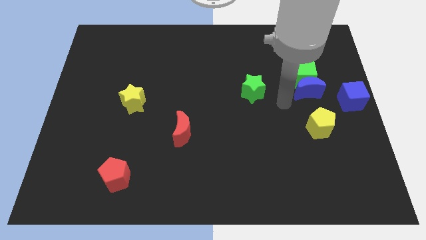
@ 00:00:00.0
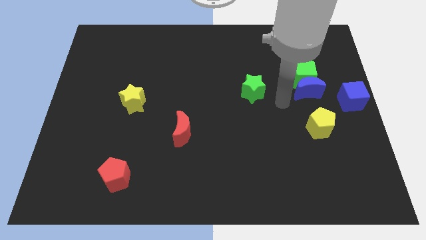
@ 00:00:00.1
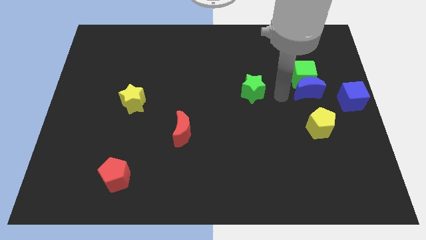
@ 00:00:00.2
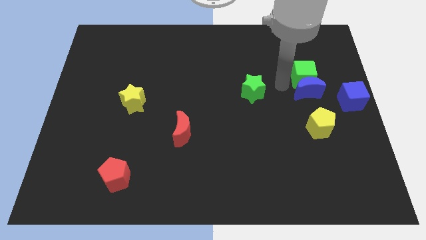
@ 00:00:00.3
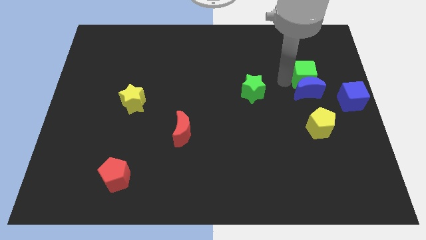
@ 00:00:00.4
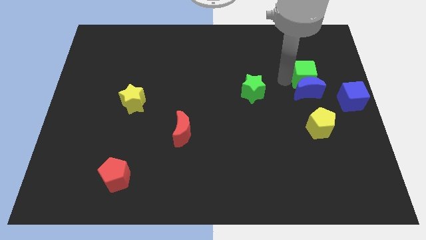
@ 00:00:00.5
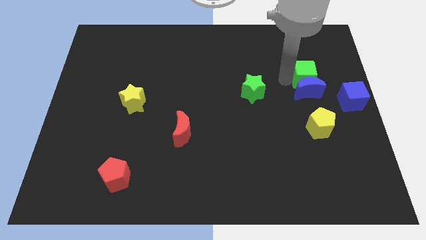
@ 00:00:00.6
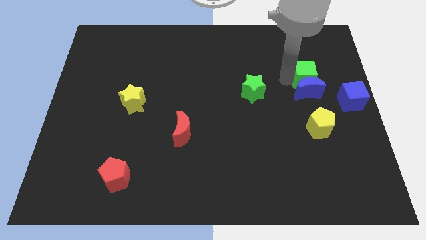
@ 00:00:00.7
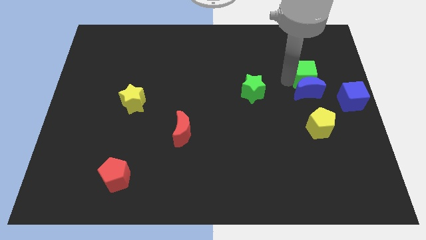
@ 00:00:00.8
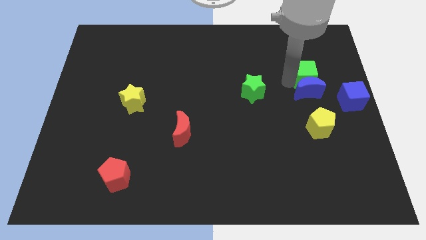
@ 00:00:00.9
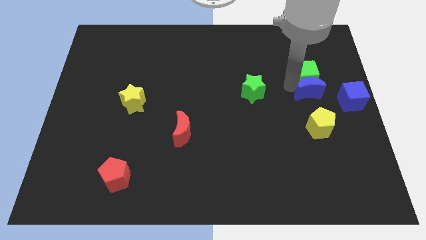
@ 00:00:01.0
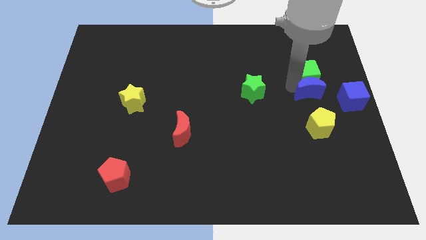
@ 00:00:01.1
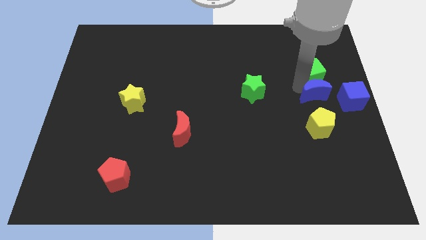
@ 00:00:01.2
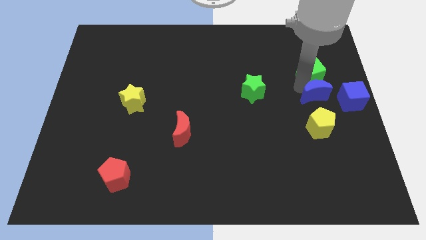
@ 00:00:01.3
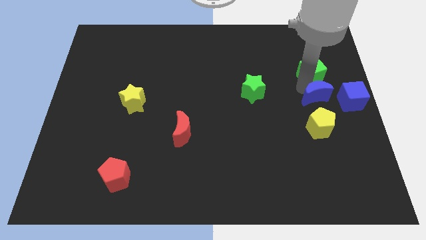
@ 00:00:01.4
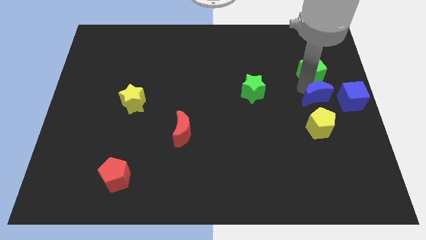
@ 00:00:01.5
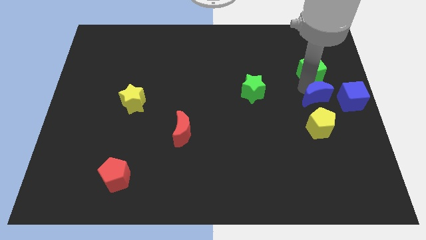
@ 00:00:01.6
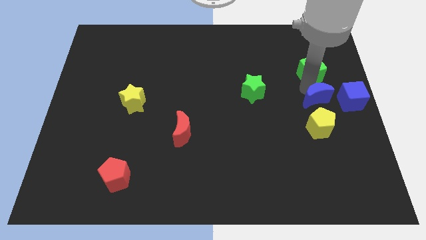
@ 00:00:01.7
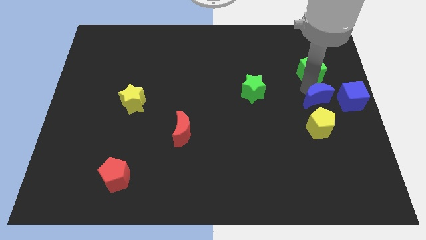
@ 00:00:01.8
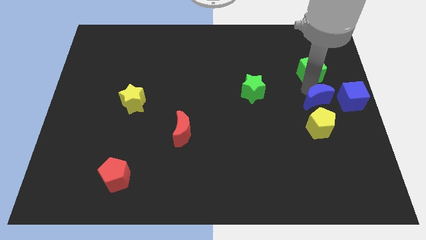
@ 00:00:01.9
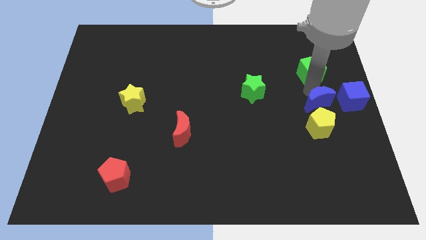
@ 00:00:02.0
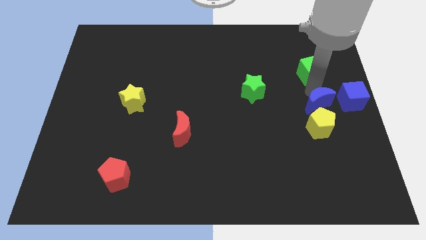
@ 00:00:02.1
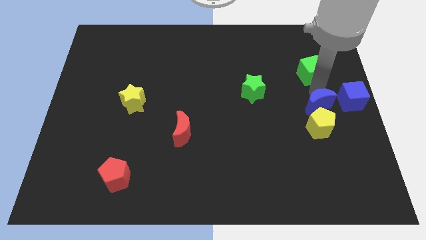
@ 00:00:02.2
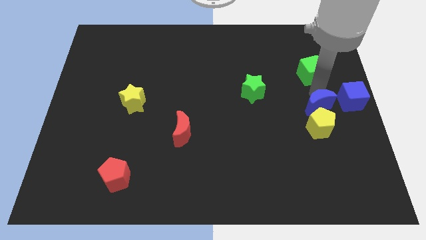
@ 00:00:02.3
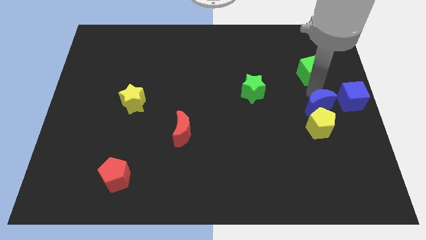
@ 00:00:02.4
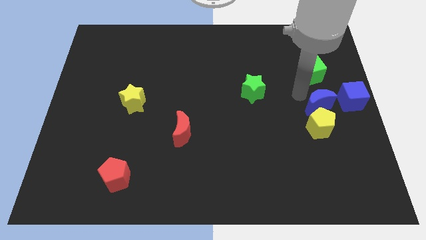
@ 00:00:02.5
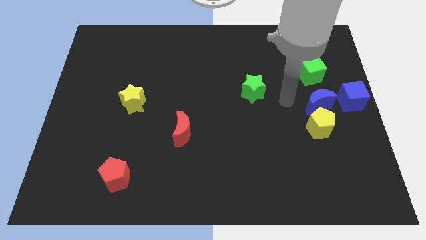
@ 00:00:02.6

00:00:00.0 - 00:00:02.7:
push the blue crescent into the yellow pentagon

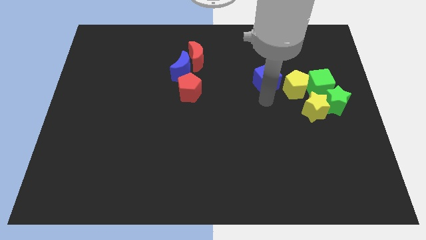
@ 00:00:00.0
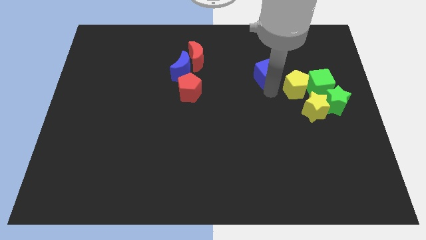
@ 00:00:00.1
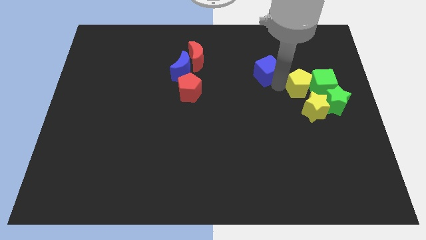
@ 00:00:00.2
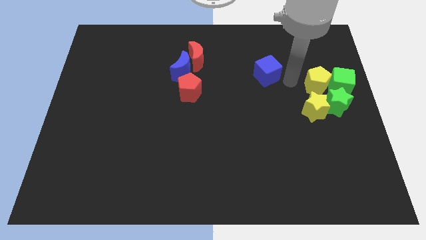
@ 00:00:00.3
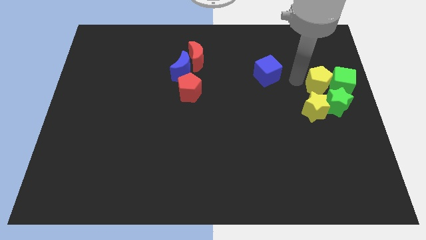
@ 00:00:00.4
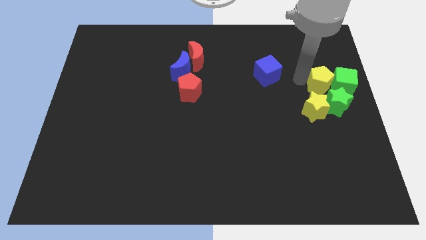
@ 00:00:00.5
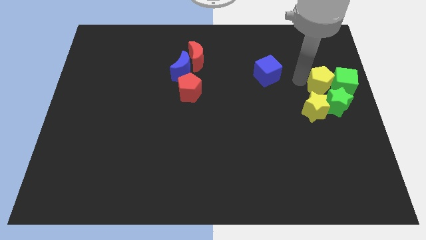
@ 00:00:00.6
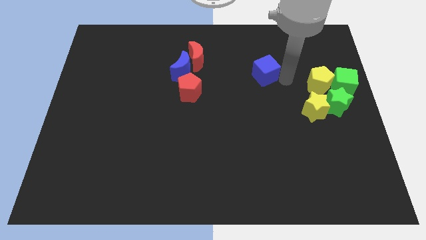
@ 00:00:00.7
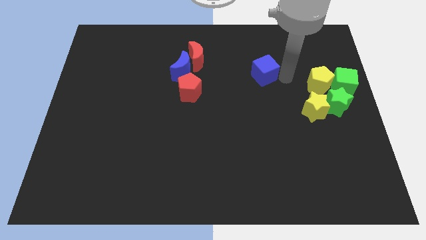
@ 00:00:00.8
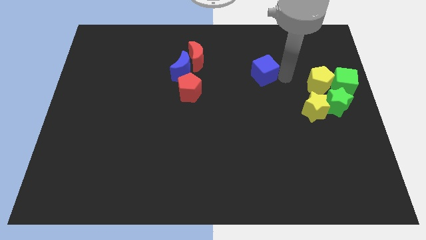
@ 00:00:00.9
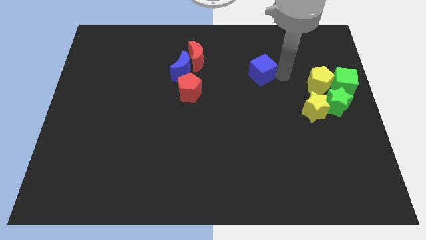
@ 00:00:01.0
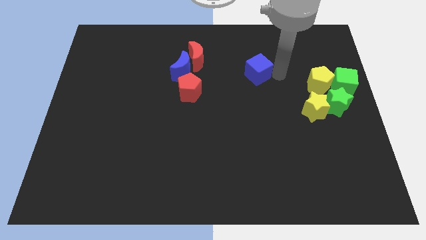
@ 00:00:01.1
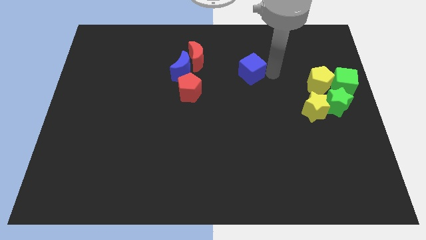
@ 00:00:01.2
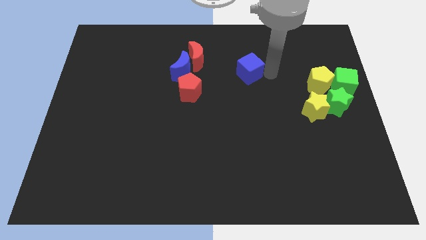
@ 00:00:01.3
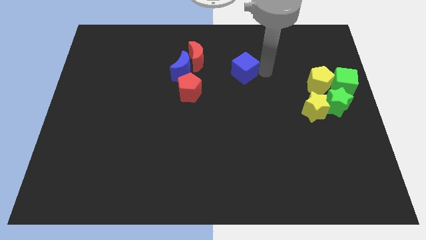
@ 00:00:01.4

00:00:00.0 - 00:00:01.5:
push the blue cube slightly to the left

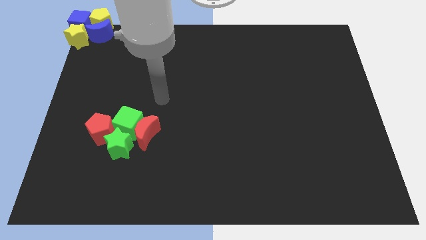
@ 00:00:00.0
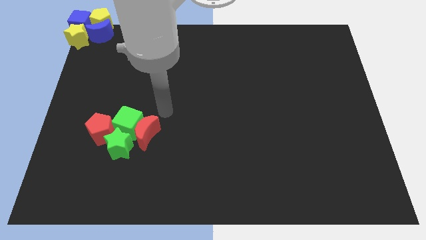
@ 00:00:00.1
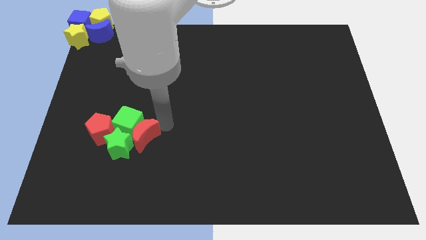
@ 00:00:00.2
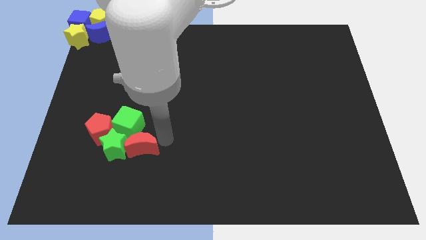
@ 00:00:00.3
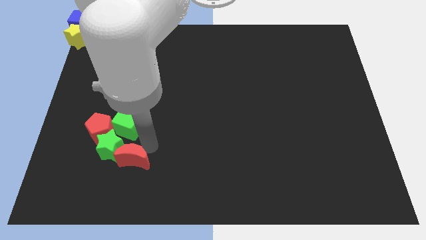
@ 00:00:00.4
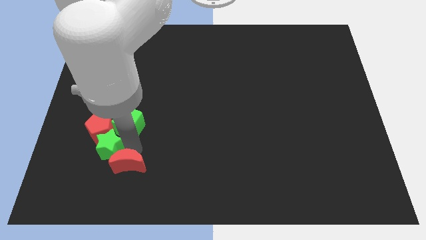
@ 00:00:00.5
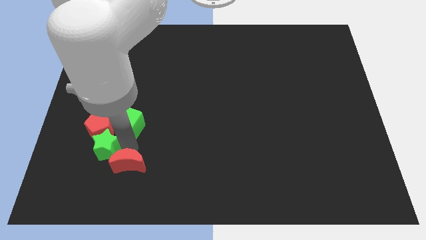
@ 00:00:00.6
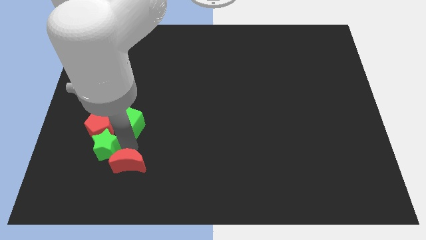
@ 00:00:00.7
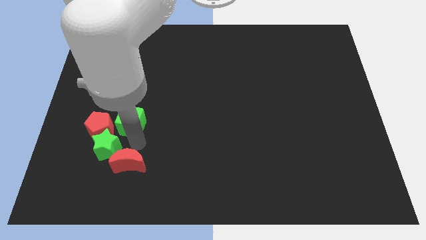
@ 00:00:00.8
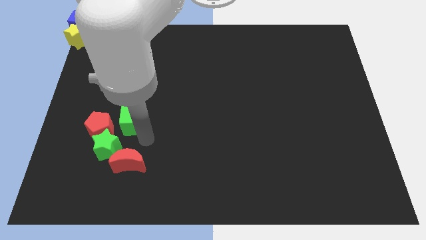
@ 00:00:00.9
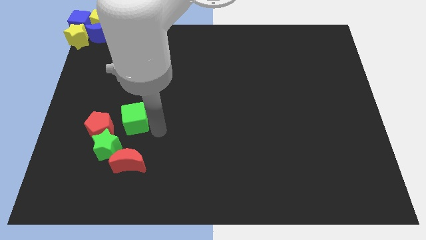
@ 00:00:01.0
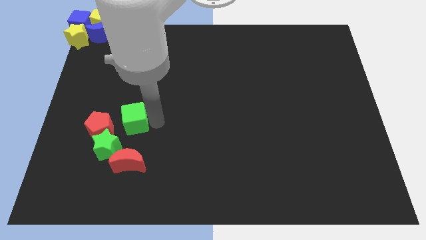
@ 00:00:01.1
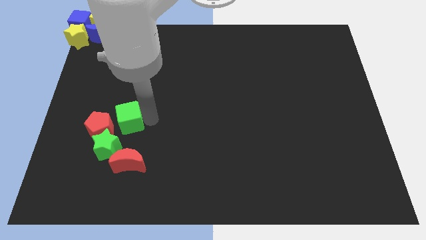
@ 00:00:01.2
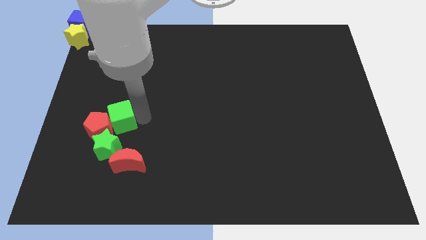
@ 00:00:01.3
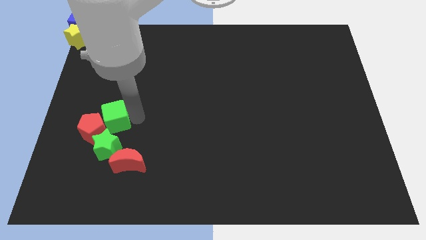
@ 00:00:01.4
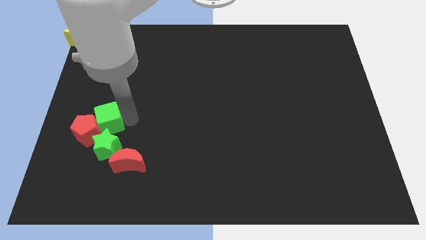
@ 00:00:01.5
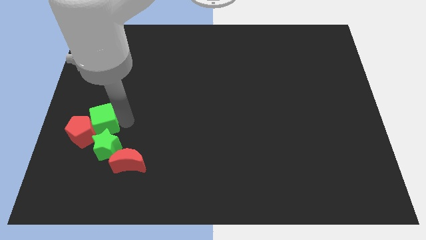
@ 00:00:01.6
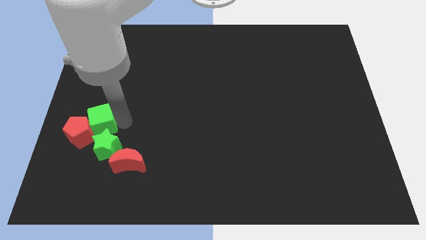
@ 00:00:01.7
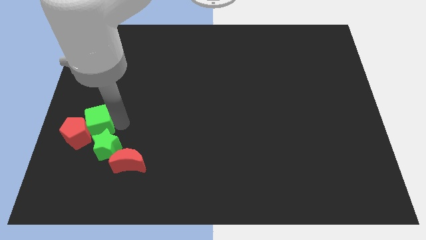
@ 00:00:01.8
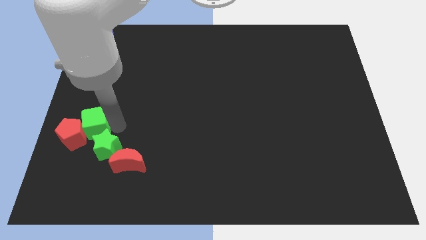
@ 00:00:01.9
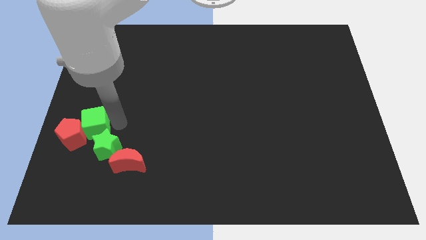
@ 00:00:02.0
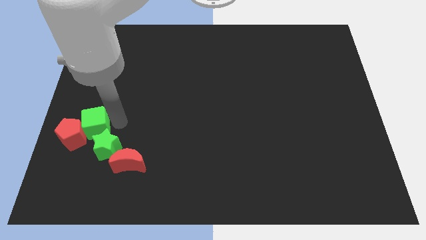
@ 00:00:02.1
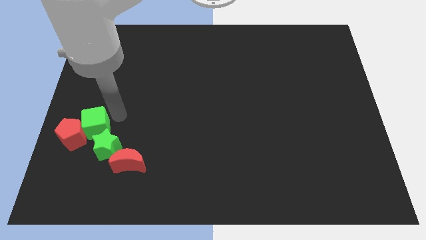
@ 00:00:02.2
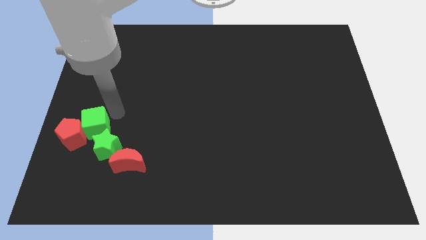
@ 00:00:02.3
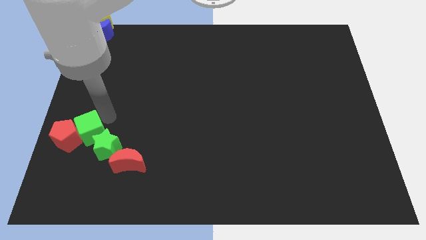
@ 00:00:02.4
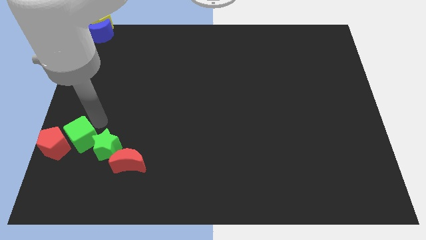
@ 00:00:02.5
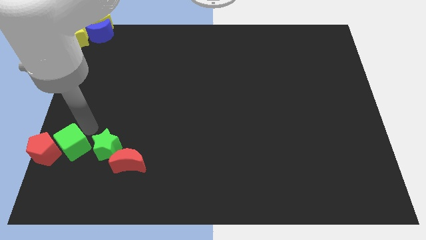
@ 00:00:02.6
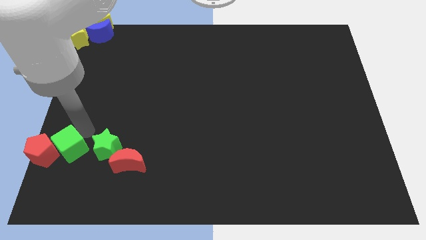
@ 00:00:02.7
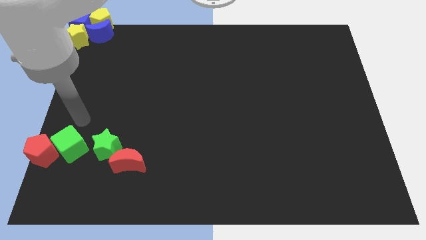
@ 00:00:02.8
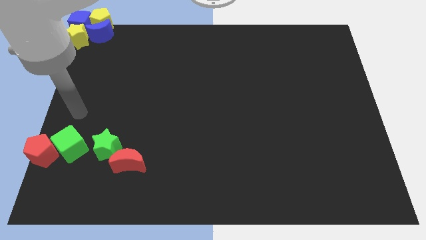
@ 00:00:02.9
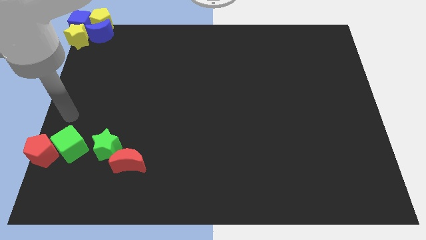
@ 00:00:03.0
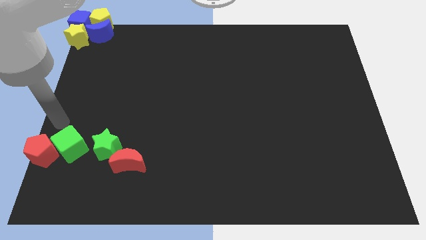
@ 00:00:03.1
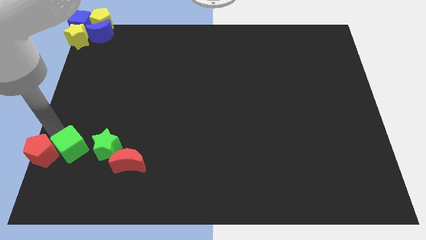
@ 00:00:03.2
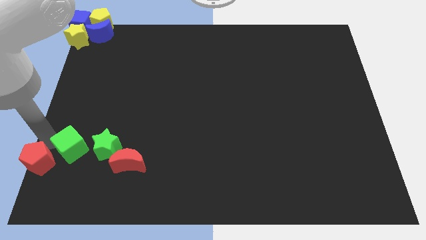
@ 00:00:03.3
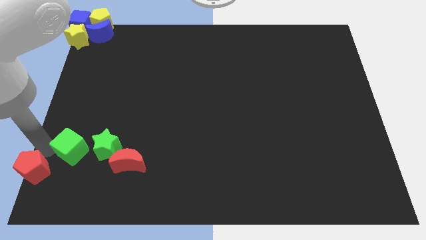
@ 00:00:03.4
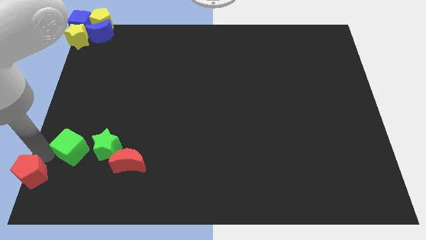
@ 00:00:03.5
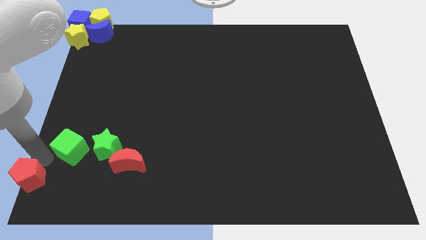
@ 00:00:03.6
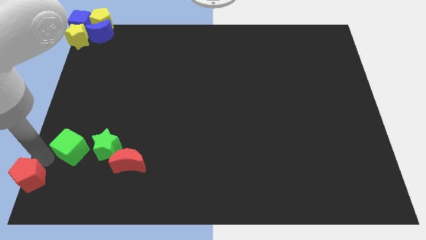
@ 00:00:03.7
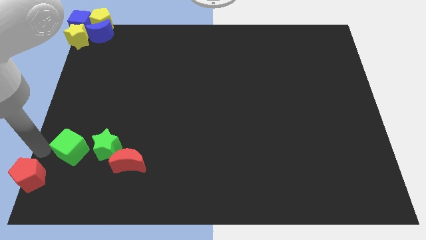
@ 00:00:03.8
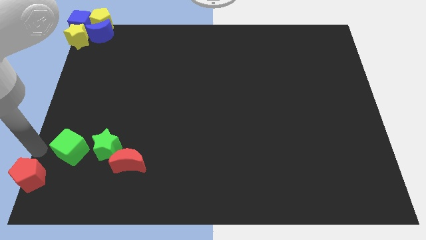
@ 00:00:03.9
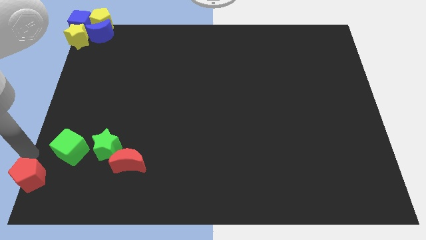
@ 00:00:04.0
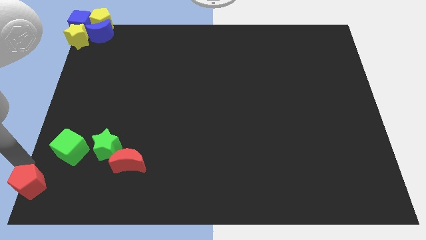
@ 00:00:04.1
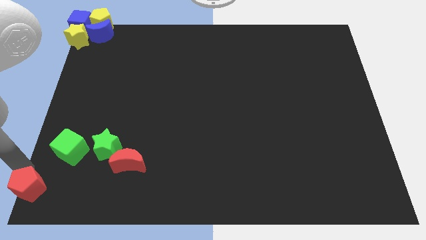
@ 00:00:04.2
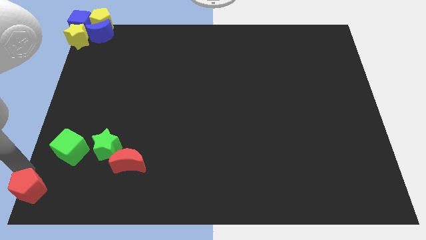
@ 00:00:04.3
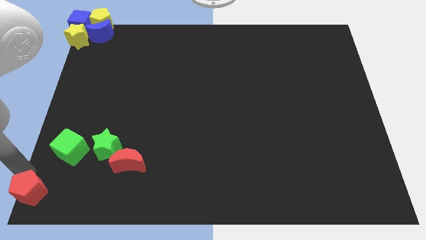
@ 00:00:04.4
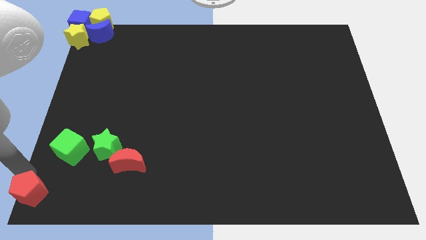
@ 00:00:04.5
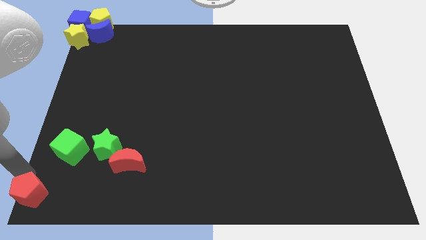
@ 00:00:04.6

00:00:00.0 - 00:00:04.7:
push the red pentagon to the bottom left corner of the board

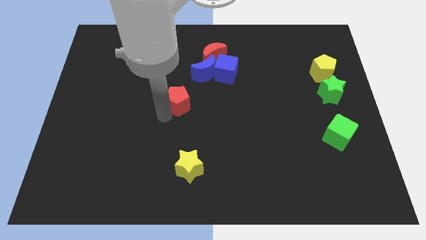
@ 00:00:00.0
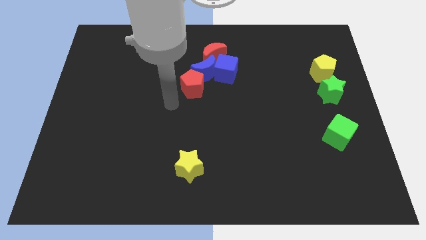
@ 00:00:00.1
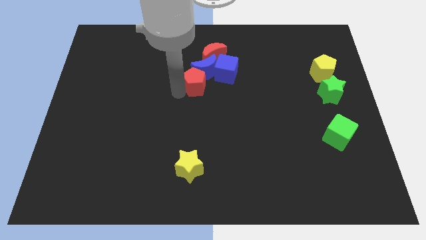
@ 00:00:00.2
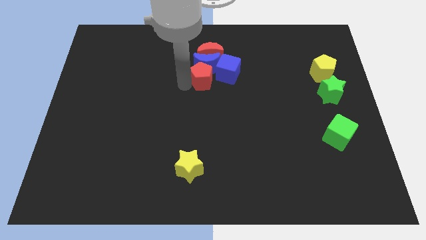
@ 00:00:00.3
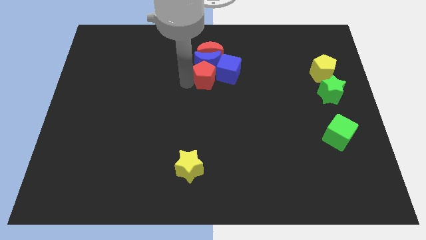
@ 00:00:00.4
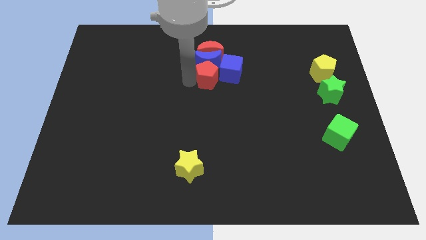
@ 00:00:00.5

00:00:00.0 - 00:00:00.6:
move the red pentagon into blue crescent and cube
